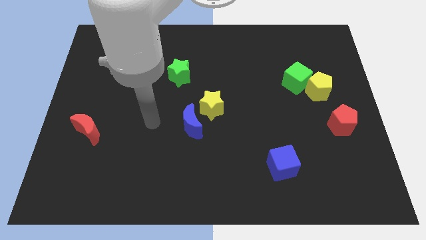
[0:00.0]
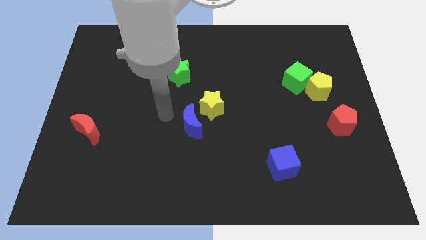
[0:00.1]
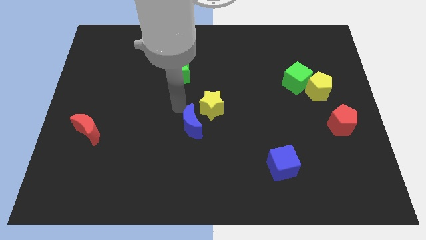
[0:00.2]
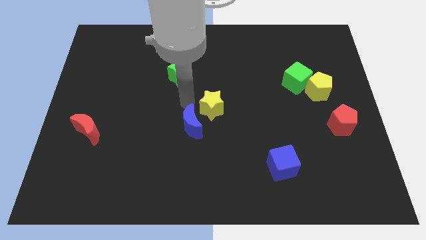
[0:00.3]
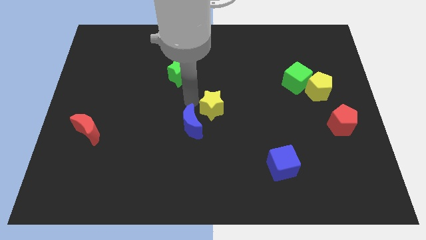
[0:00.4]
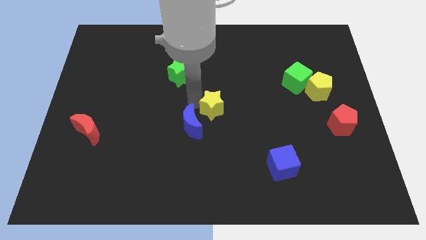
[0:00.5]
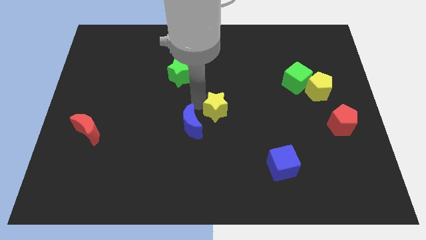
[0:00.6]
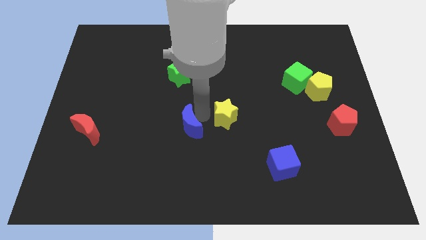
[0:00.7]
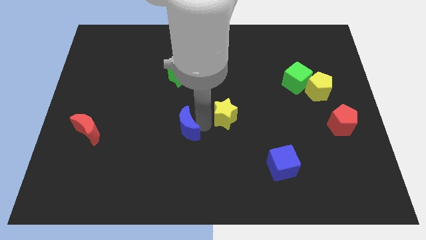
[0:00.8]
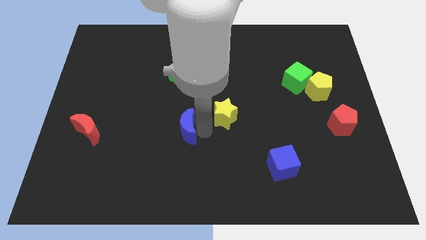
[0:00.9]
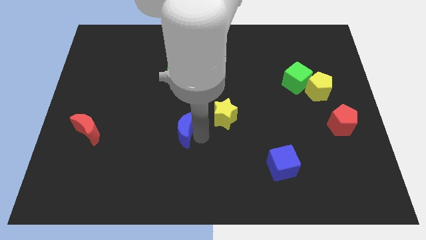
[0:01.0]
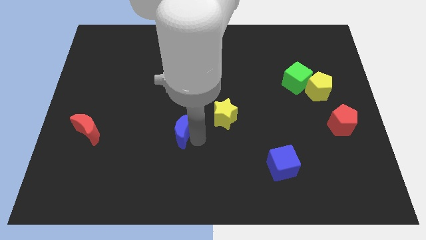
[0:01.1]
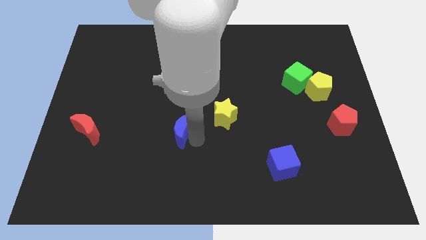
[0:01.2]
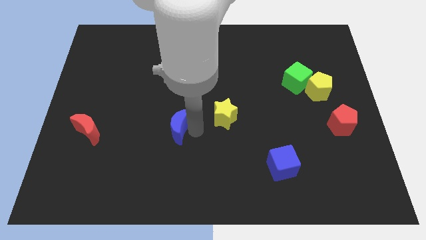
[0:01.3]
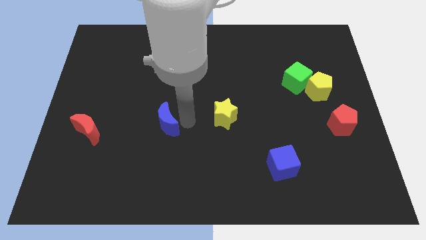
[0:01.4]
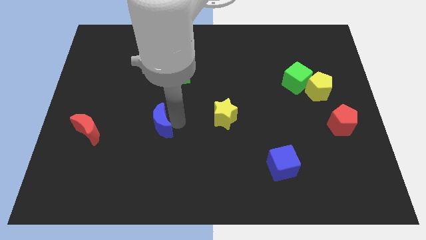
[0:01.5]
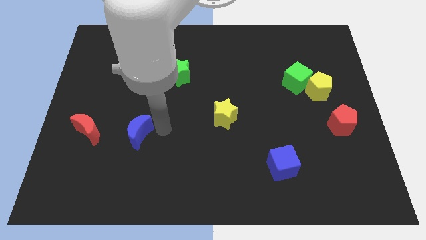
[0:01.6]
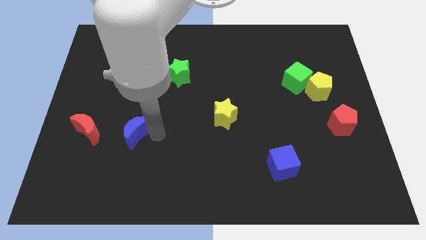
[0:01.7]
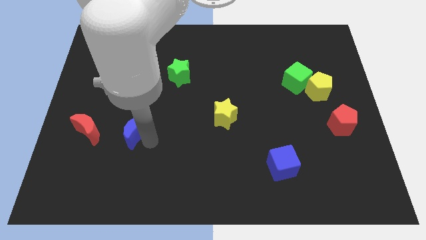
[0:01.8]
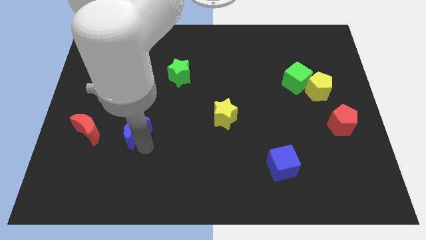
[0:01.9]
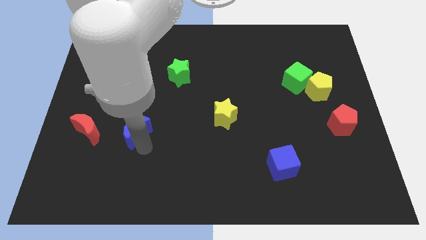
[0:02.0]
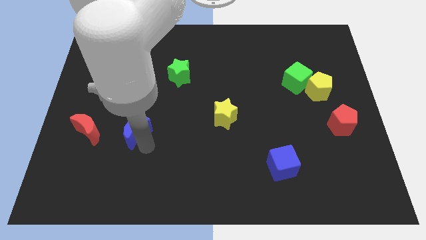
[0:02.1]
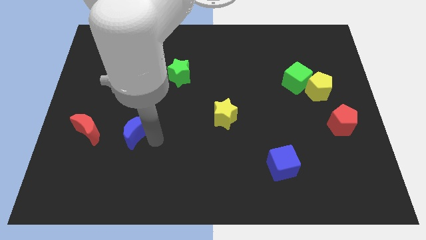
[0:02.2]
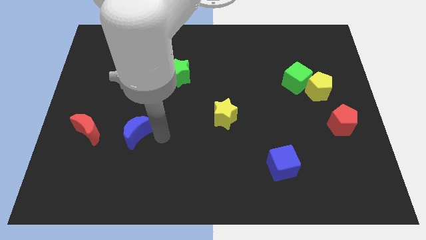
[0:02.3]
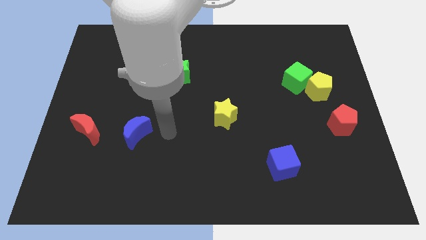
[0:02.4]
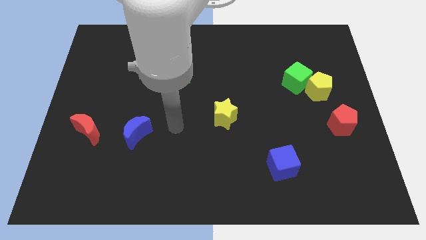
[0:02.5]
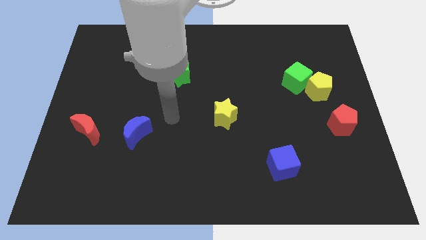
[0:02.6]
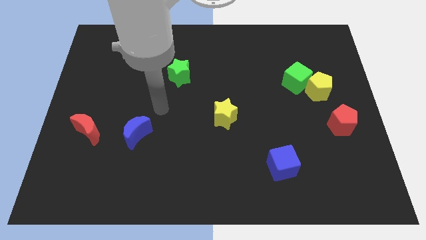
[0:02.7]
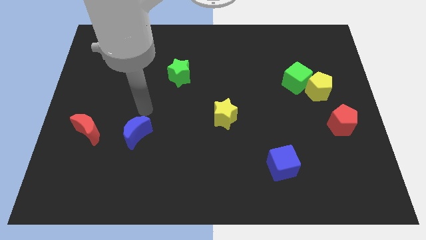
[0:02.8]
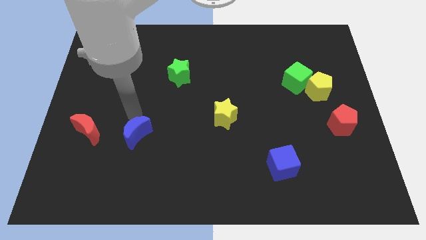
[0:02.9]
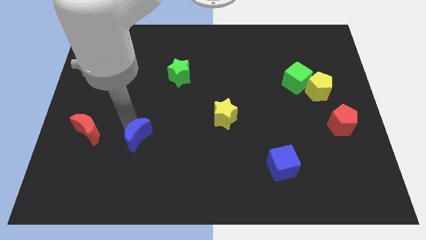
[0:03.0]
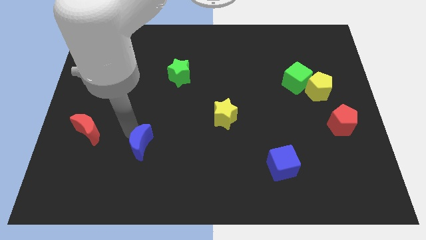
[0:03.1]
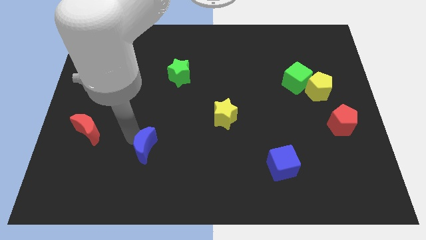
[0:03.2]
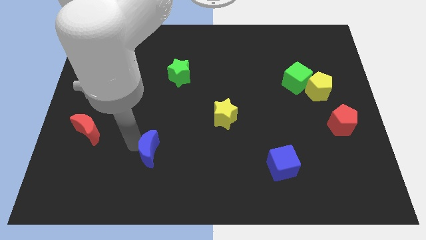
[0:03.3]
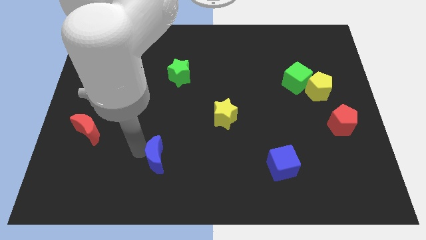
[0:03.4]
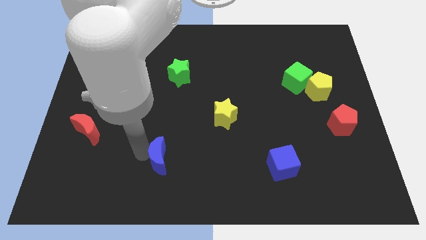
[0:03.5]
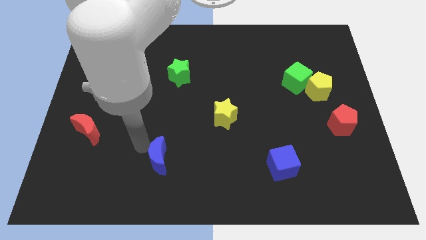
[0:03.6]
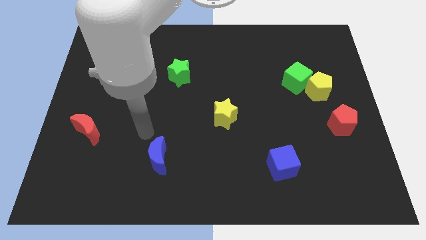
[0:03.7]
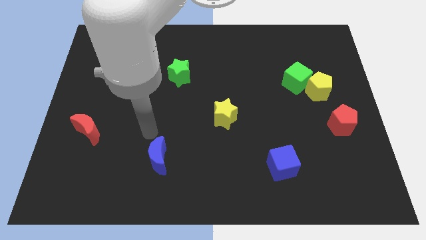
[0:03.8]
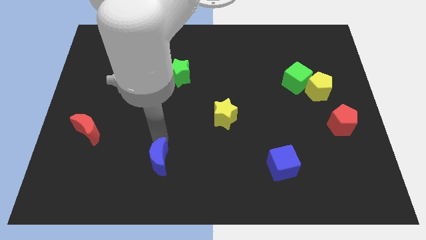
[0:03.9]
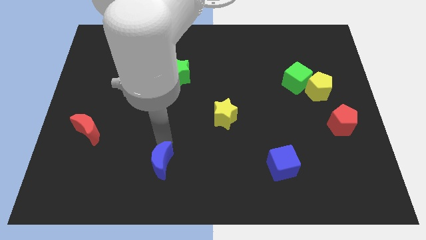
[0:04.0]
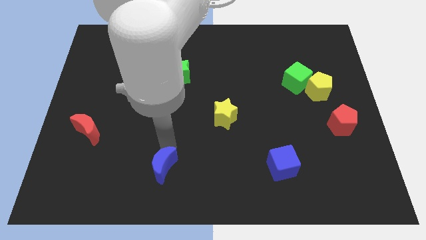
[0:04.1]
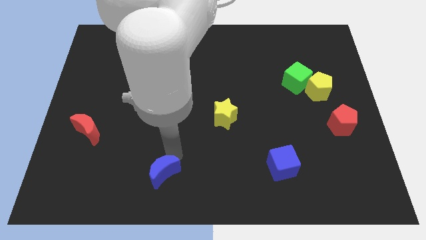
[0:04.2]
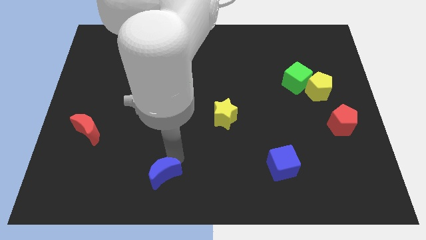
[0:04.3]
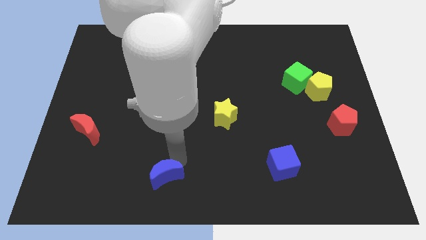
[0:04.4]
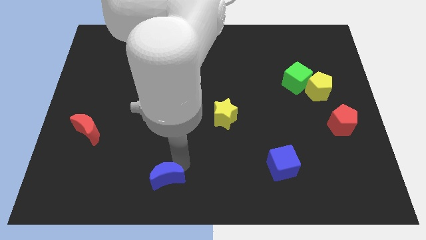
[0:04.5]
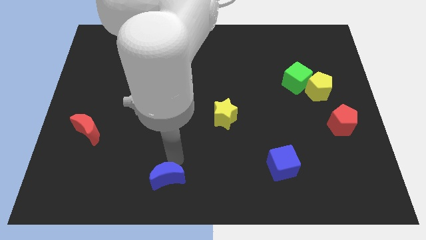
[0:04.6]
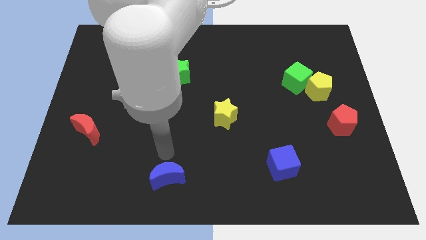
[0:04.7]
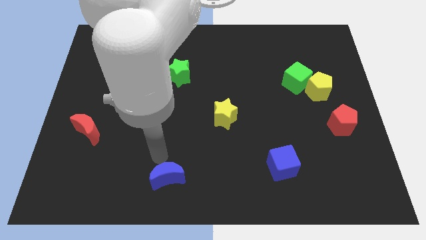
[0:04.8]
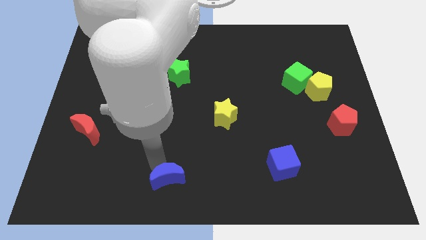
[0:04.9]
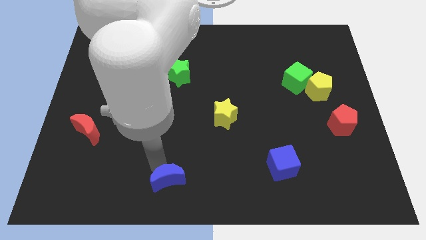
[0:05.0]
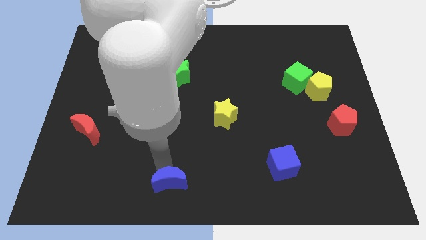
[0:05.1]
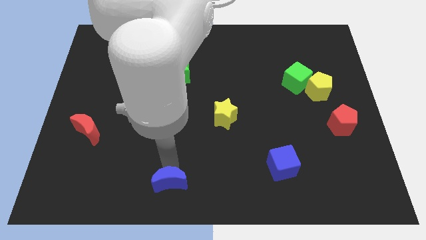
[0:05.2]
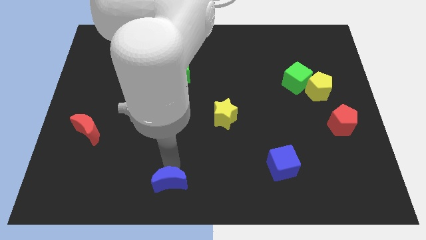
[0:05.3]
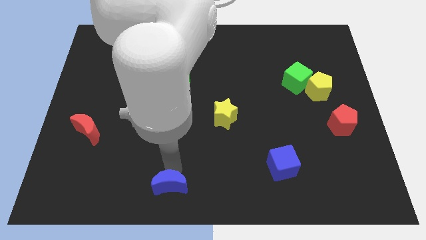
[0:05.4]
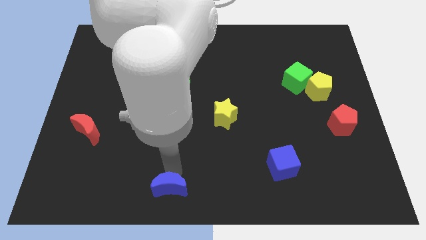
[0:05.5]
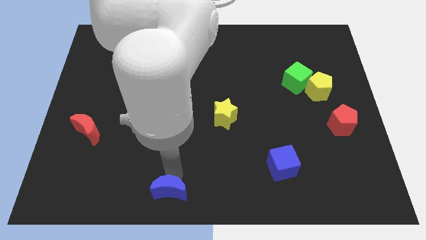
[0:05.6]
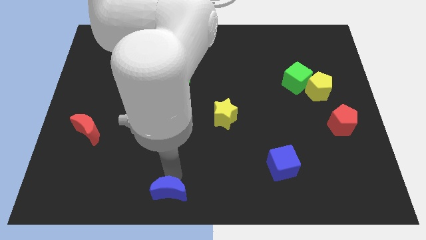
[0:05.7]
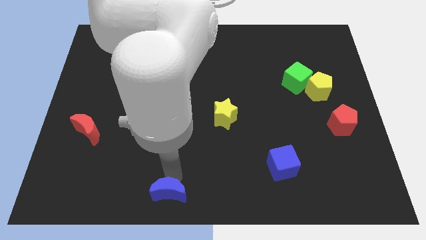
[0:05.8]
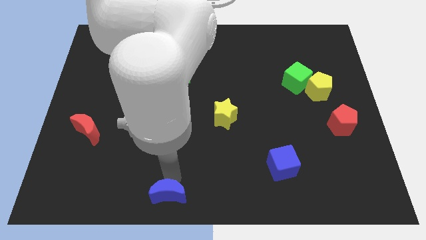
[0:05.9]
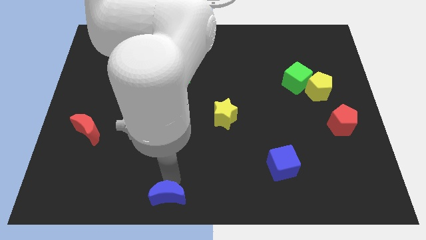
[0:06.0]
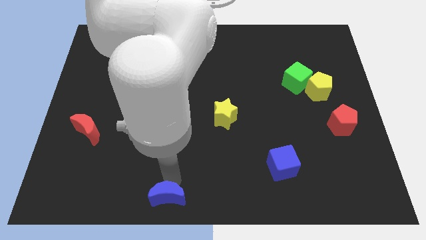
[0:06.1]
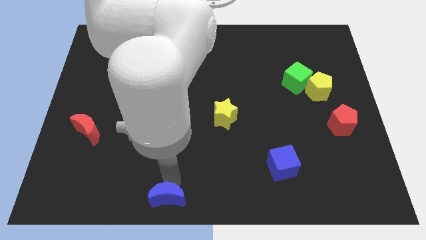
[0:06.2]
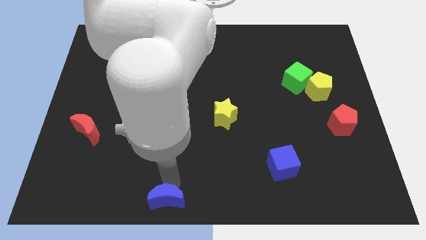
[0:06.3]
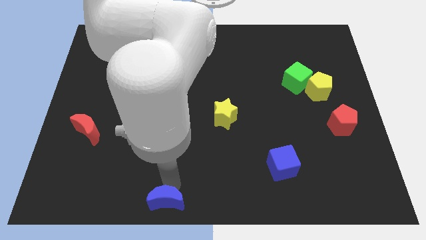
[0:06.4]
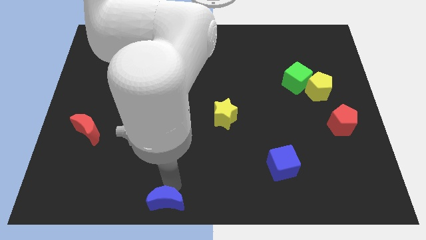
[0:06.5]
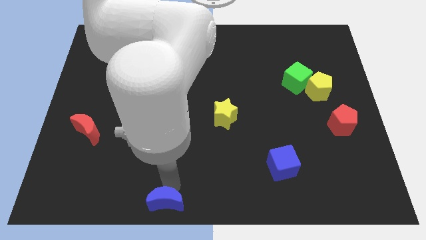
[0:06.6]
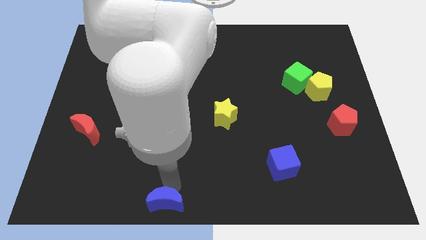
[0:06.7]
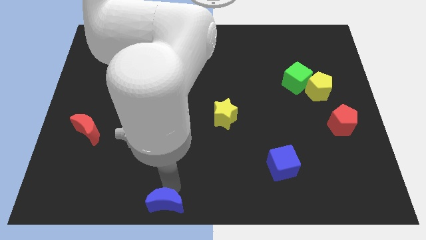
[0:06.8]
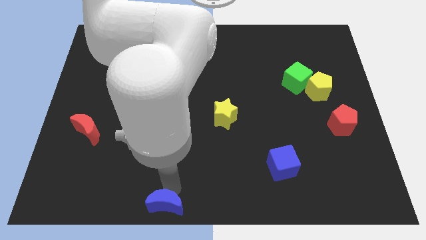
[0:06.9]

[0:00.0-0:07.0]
move the blue crescent slightly to the bottom center

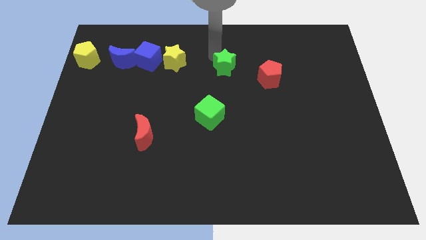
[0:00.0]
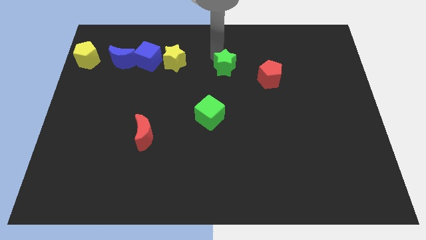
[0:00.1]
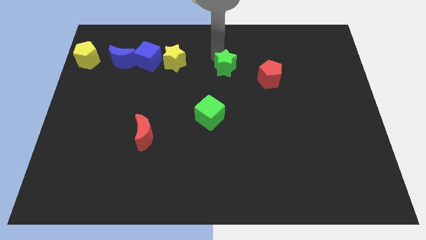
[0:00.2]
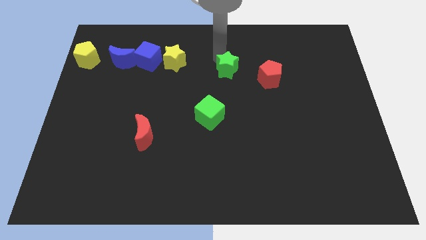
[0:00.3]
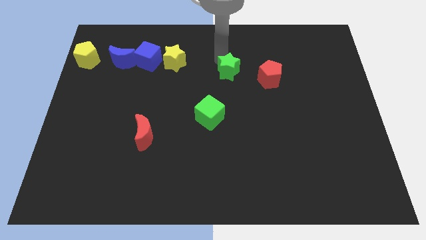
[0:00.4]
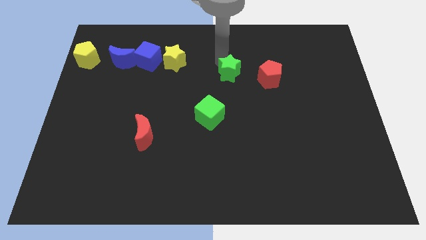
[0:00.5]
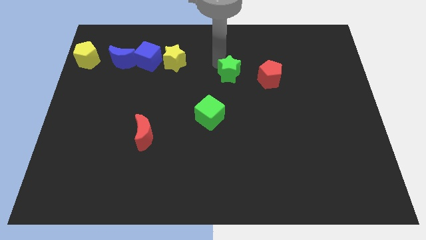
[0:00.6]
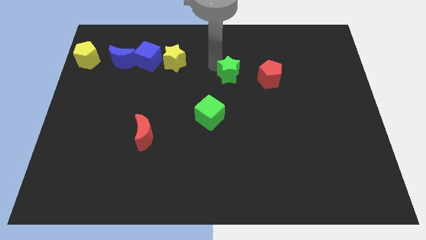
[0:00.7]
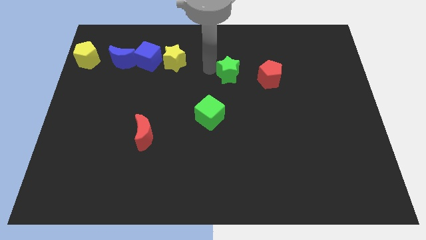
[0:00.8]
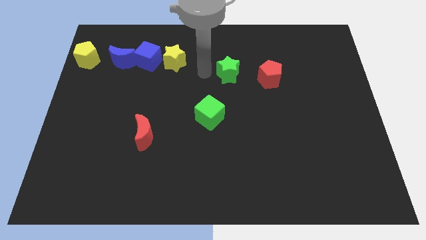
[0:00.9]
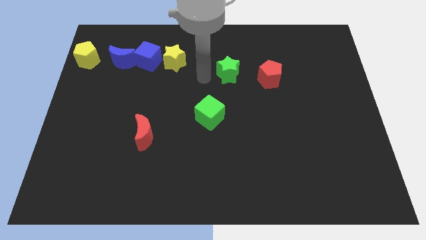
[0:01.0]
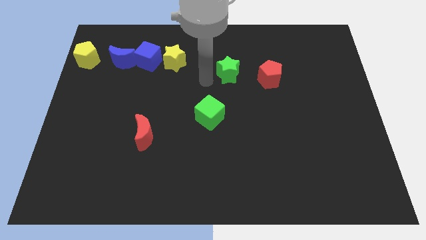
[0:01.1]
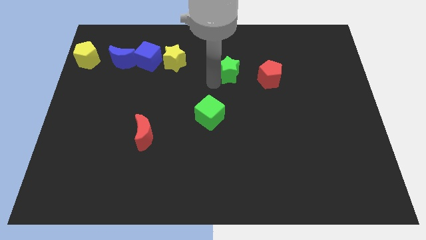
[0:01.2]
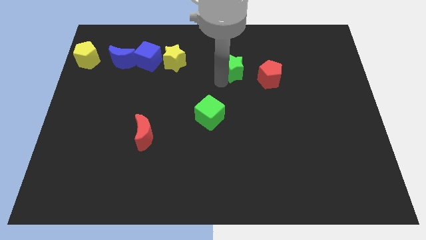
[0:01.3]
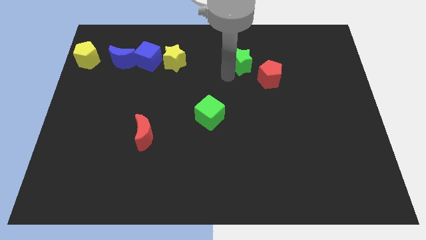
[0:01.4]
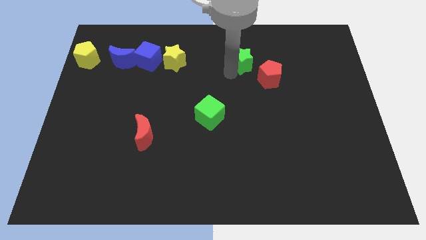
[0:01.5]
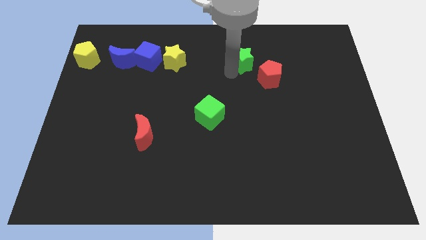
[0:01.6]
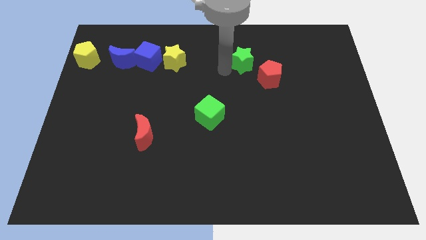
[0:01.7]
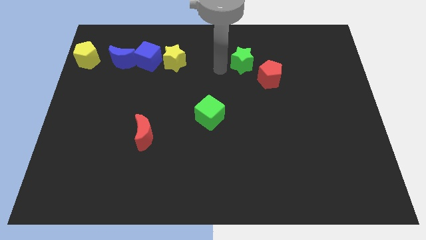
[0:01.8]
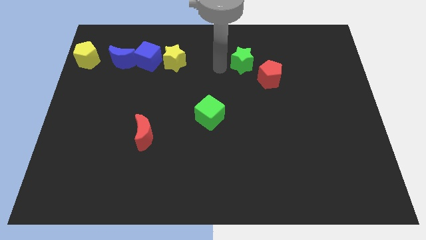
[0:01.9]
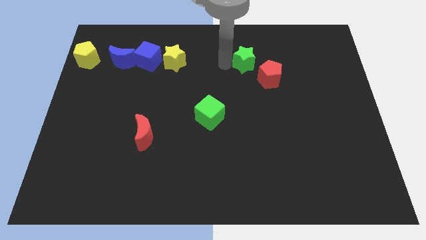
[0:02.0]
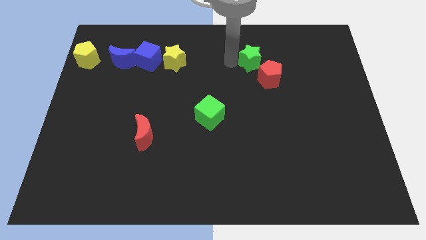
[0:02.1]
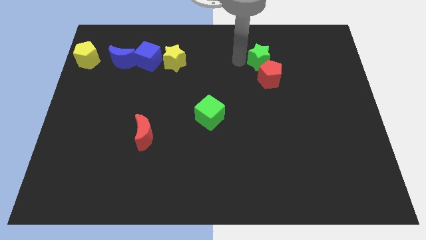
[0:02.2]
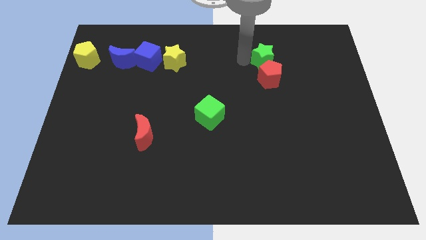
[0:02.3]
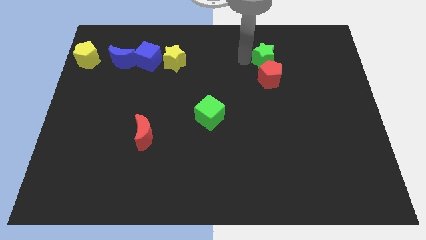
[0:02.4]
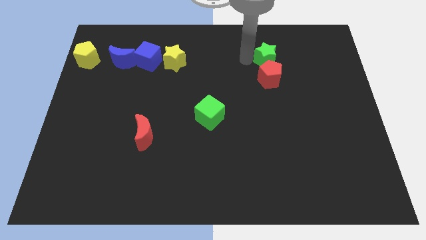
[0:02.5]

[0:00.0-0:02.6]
place green star above red pentagon
